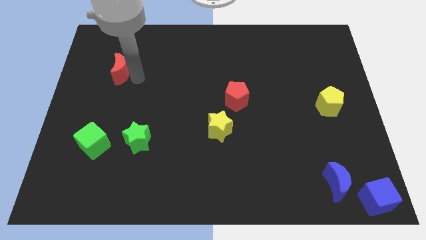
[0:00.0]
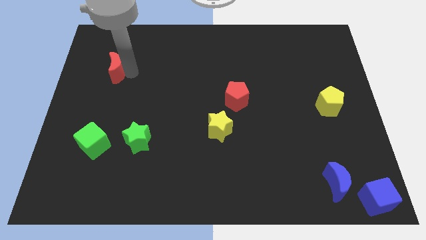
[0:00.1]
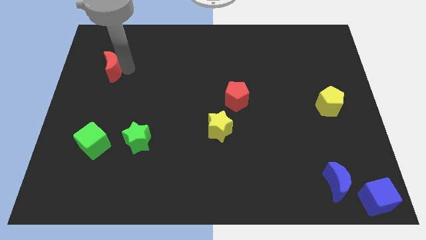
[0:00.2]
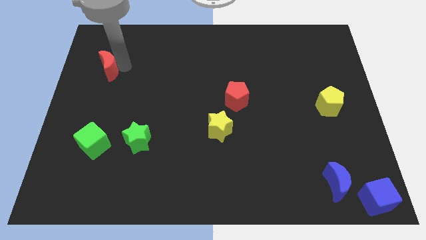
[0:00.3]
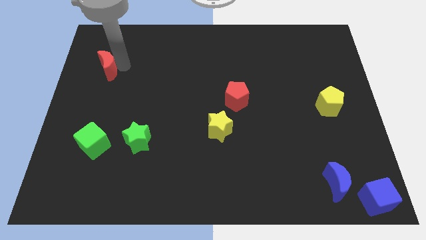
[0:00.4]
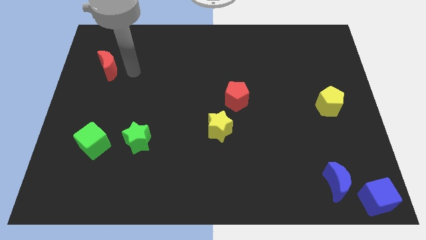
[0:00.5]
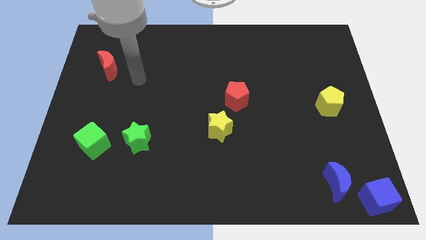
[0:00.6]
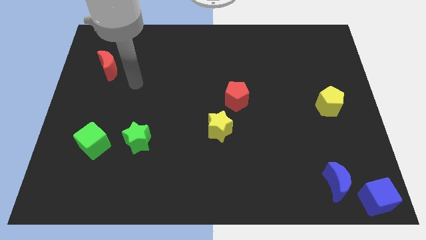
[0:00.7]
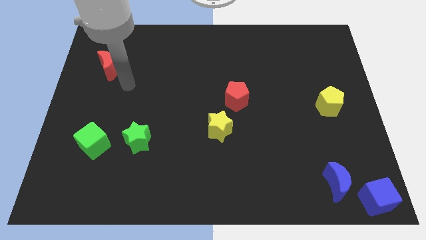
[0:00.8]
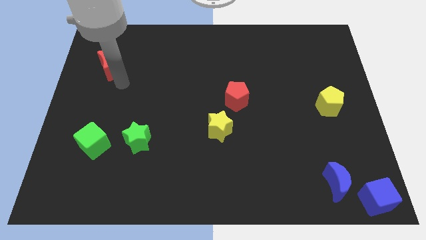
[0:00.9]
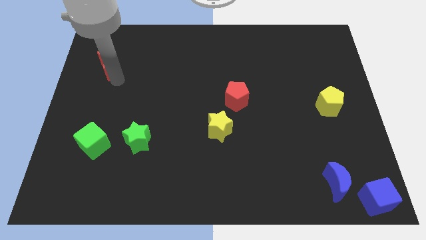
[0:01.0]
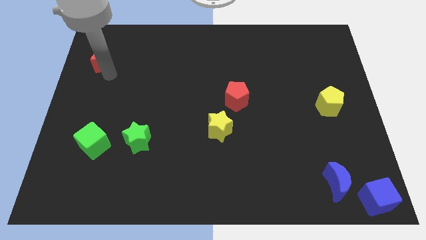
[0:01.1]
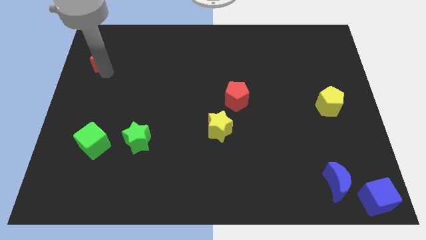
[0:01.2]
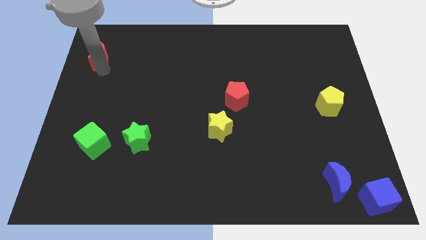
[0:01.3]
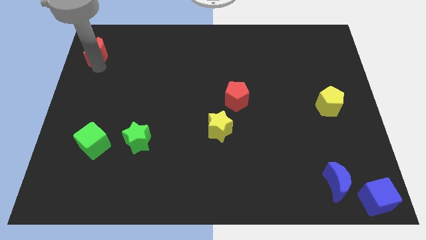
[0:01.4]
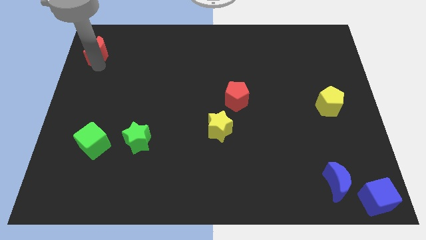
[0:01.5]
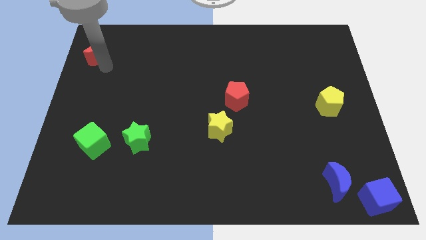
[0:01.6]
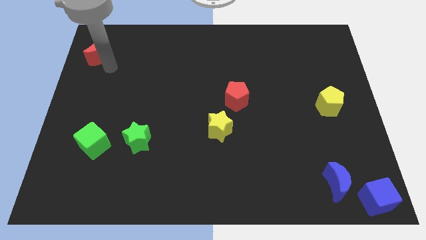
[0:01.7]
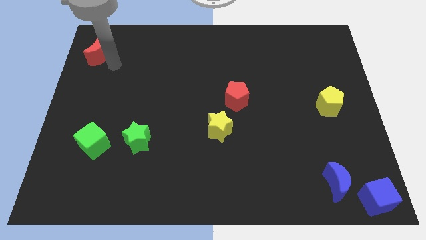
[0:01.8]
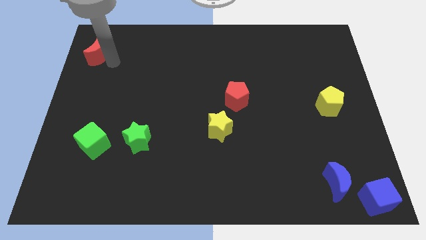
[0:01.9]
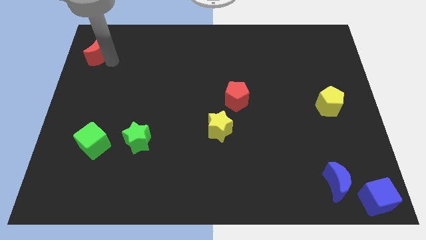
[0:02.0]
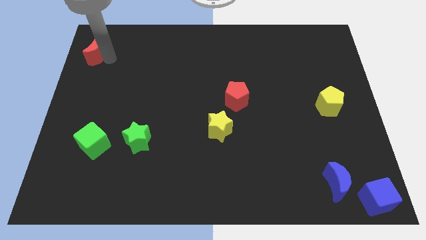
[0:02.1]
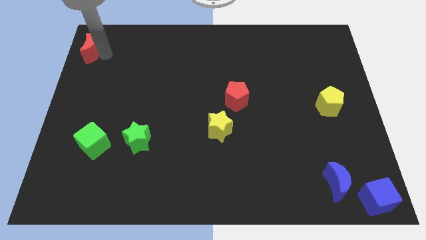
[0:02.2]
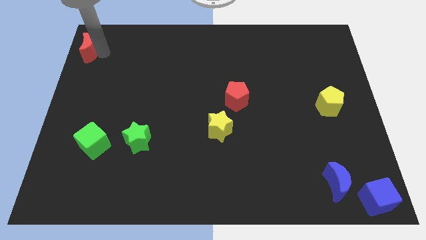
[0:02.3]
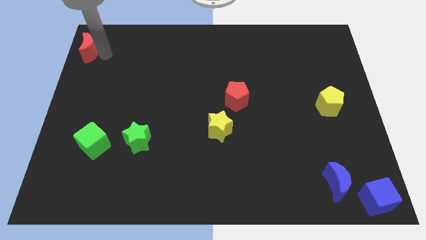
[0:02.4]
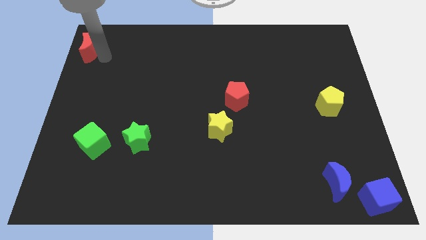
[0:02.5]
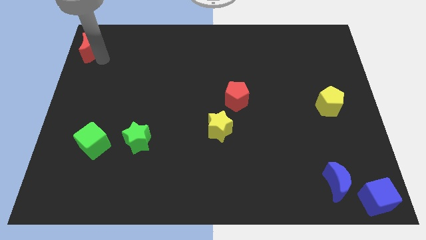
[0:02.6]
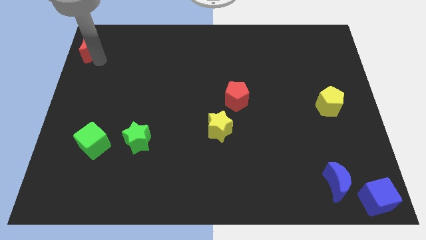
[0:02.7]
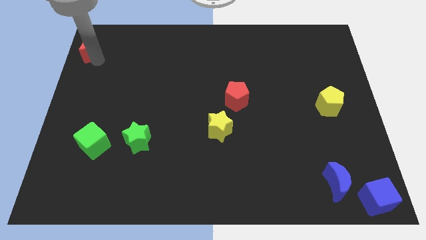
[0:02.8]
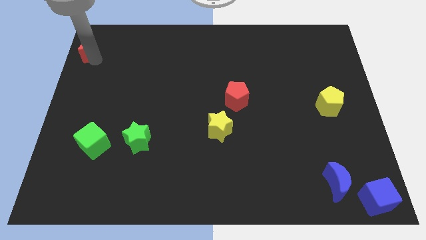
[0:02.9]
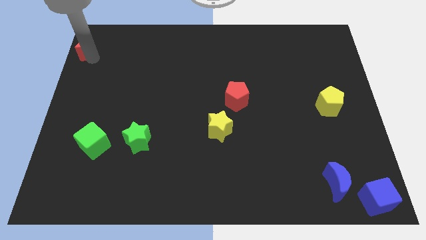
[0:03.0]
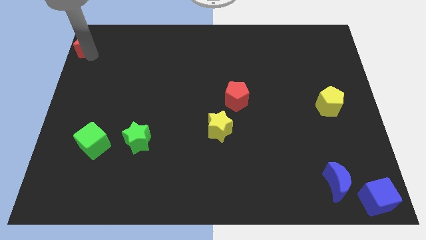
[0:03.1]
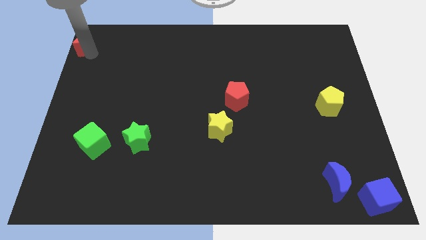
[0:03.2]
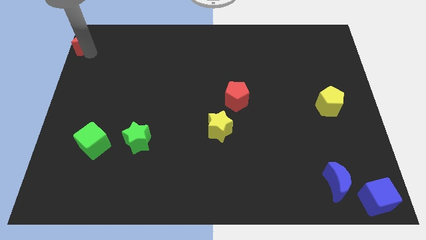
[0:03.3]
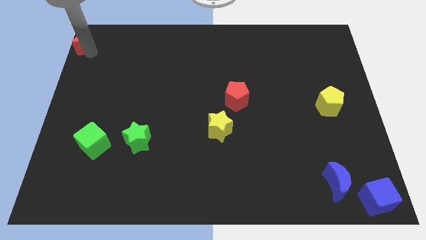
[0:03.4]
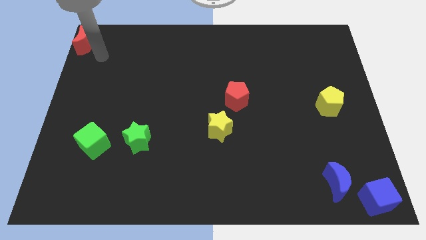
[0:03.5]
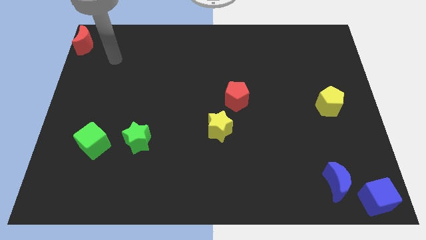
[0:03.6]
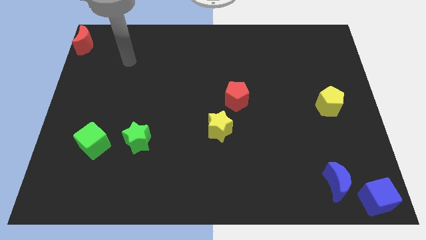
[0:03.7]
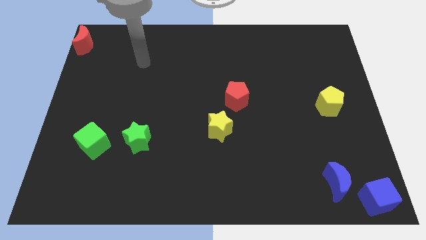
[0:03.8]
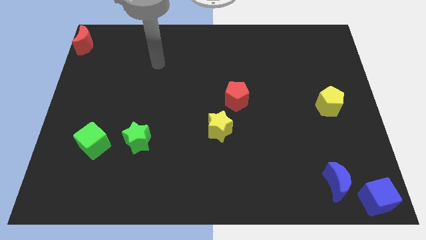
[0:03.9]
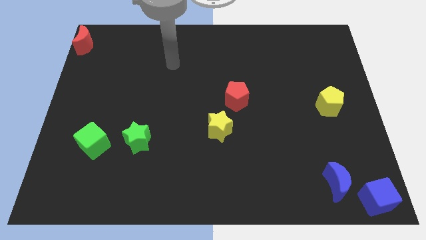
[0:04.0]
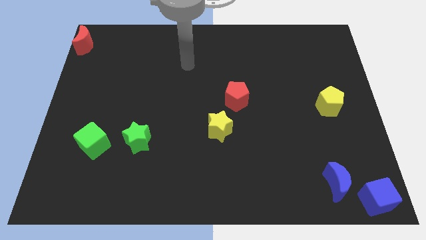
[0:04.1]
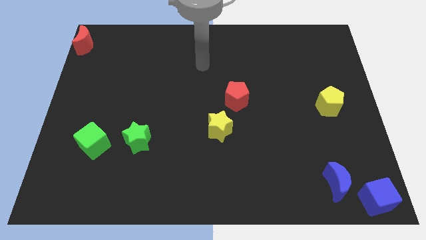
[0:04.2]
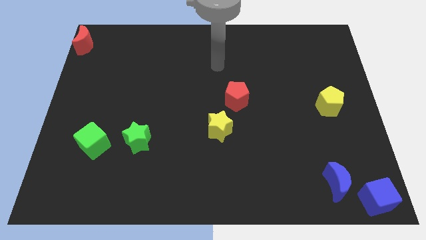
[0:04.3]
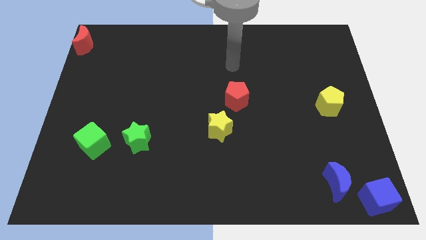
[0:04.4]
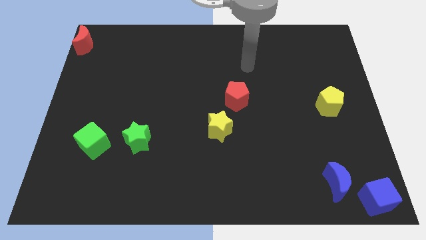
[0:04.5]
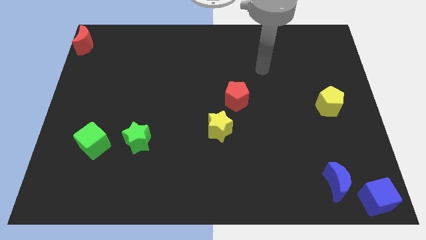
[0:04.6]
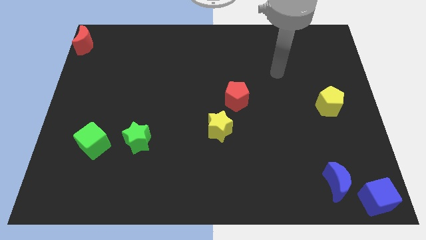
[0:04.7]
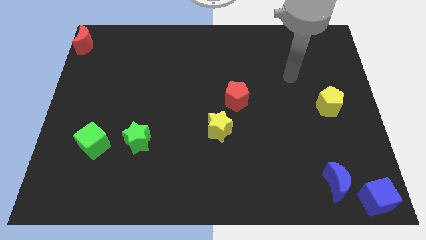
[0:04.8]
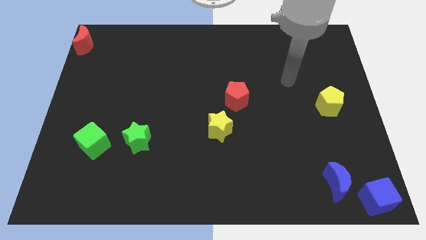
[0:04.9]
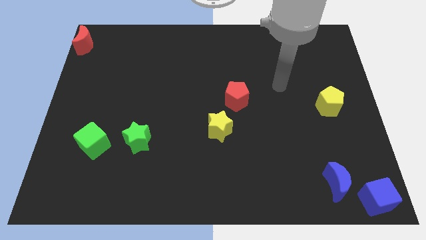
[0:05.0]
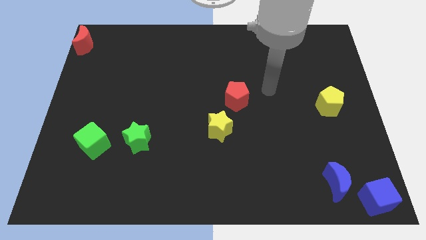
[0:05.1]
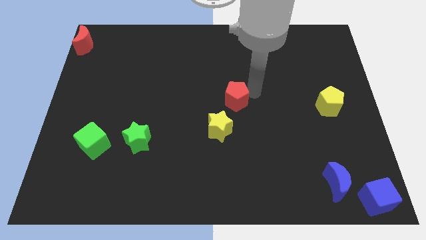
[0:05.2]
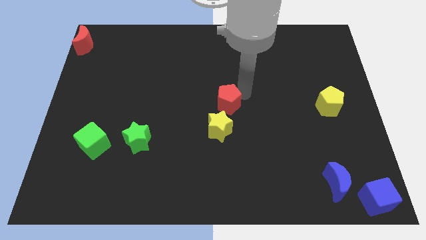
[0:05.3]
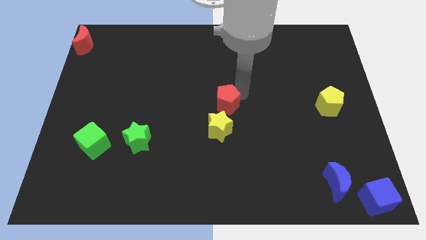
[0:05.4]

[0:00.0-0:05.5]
place the red crescent at the top left corner of the board

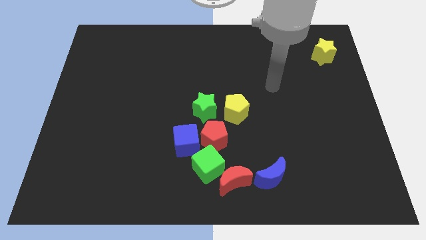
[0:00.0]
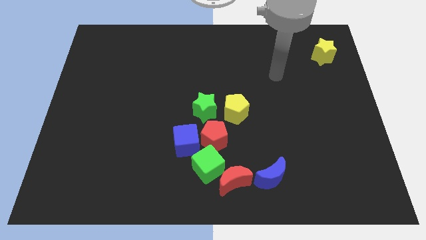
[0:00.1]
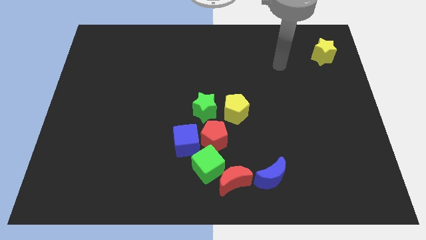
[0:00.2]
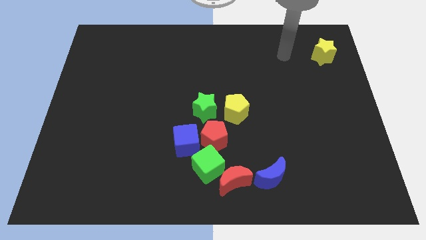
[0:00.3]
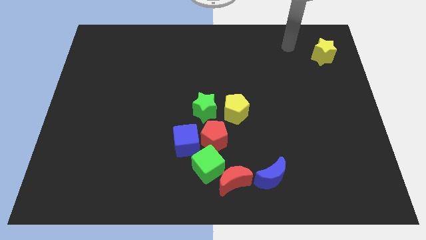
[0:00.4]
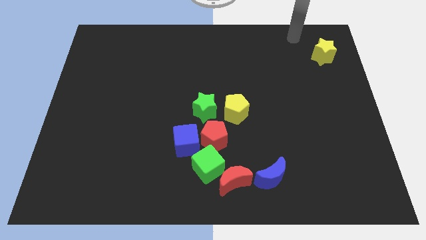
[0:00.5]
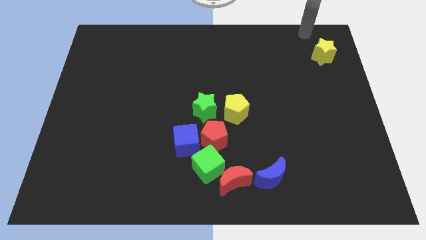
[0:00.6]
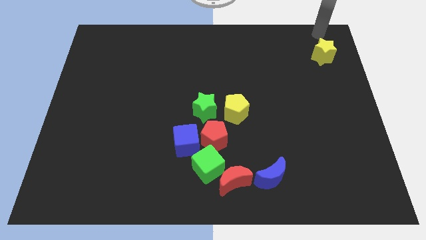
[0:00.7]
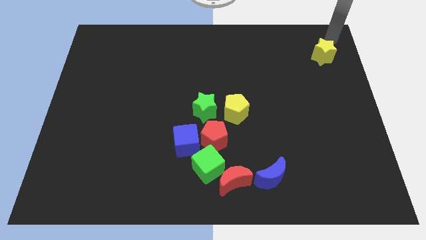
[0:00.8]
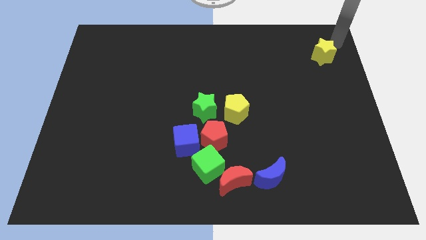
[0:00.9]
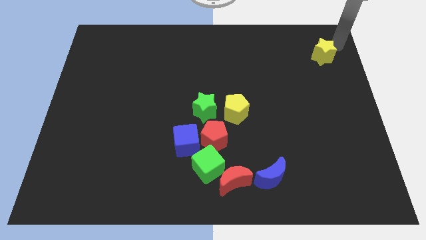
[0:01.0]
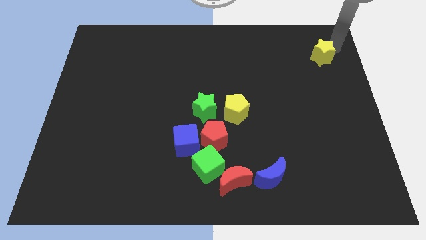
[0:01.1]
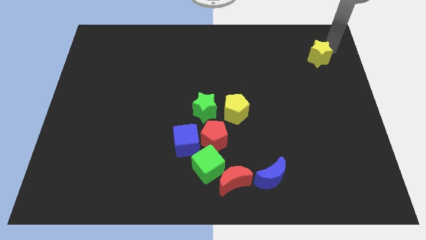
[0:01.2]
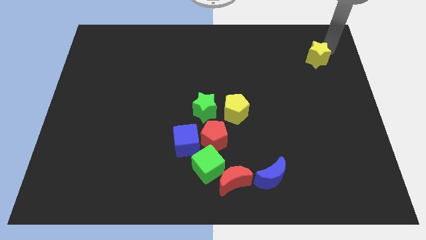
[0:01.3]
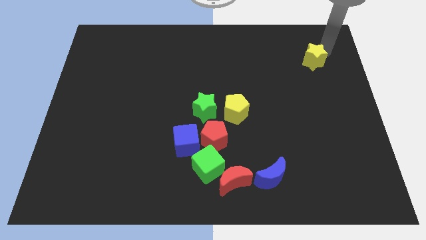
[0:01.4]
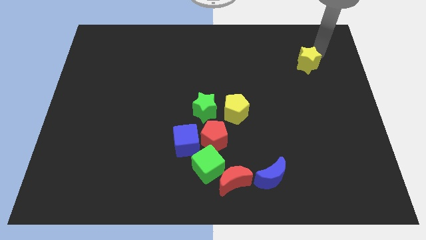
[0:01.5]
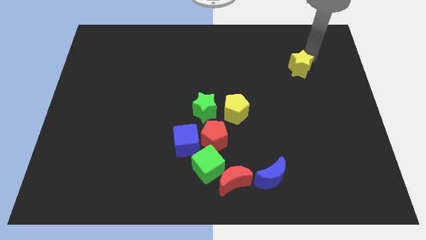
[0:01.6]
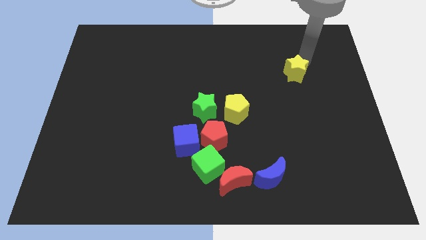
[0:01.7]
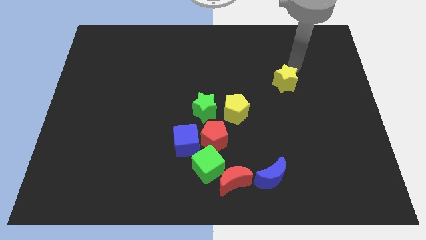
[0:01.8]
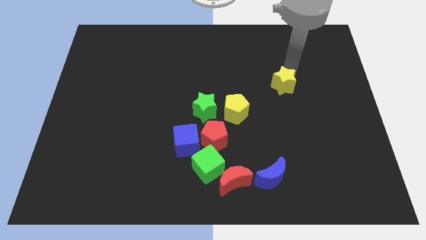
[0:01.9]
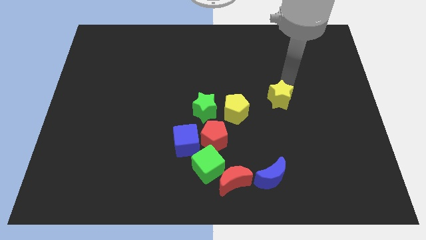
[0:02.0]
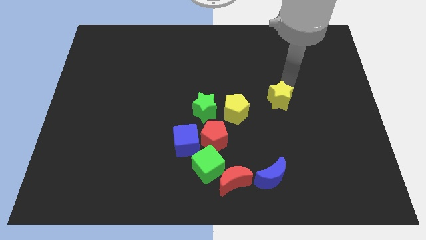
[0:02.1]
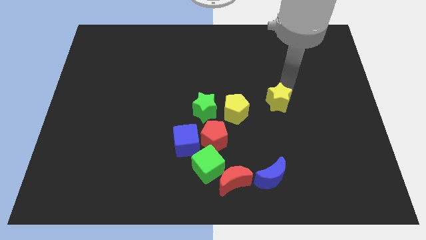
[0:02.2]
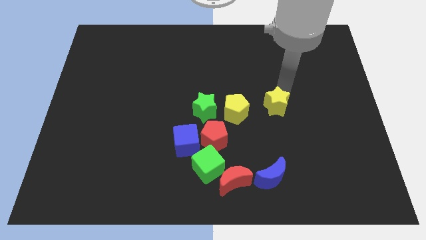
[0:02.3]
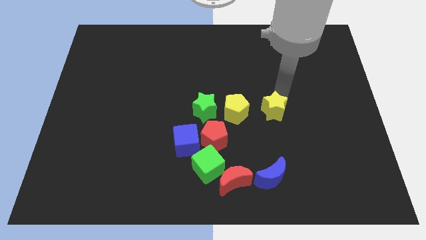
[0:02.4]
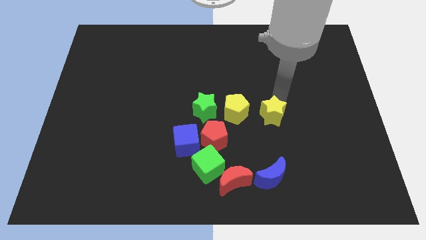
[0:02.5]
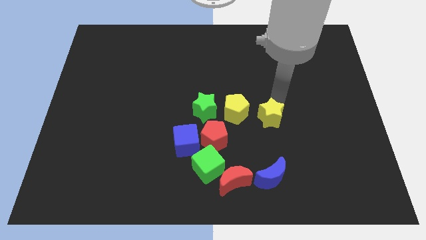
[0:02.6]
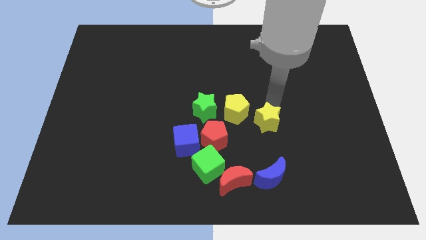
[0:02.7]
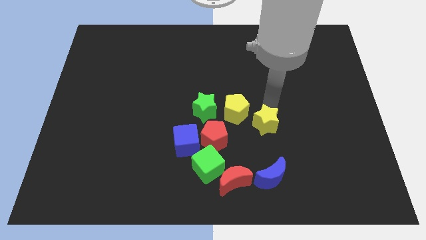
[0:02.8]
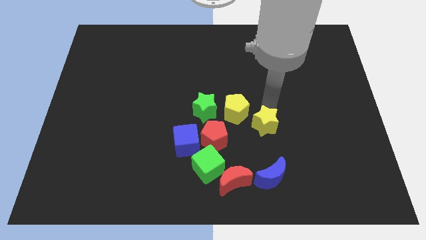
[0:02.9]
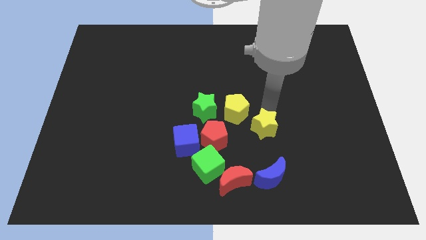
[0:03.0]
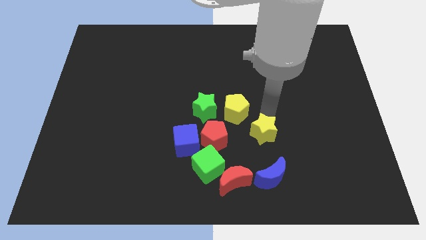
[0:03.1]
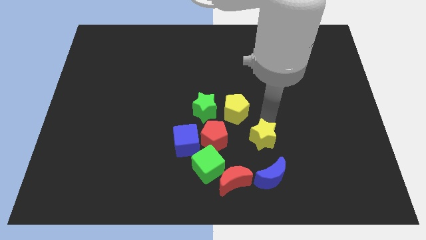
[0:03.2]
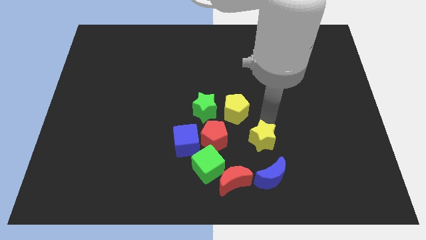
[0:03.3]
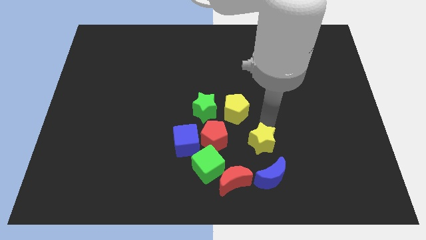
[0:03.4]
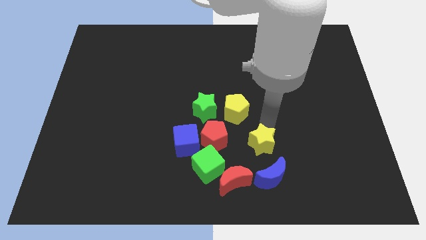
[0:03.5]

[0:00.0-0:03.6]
push the yellow star towards the top side of the blue crescent
